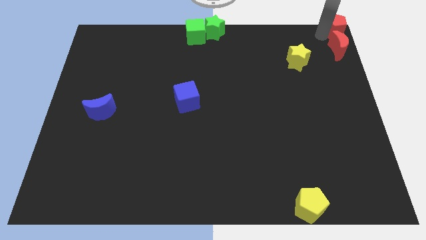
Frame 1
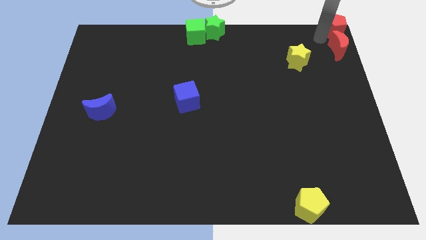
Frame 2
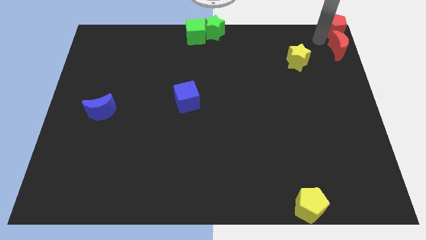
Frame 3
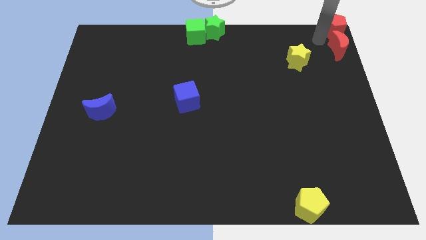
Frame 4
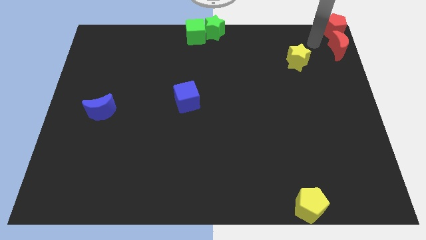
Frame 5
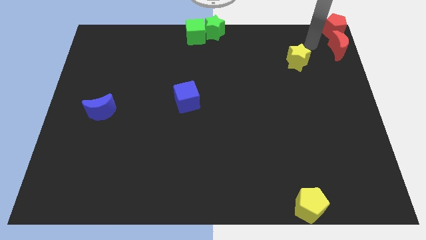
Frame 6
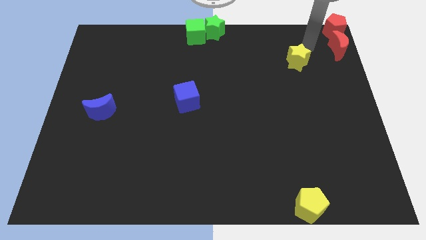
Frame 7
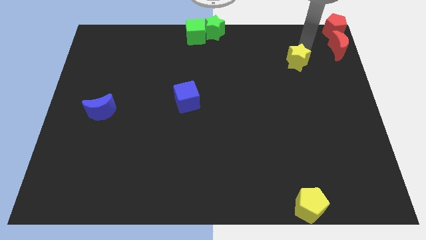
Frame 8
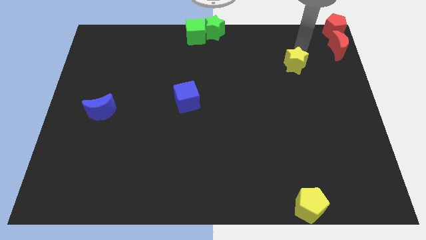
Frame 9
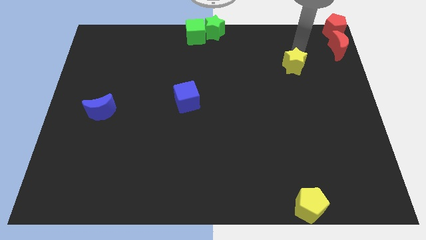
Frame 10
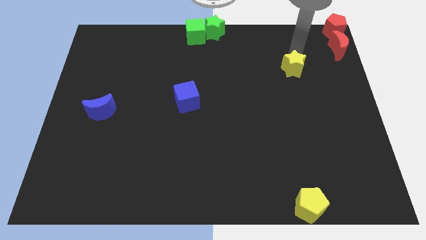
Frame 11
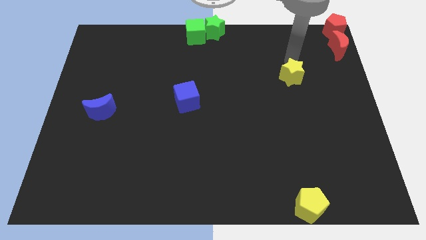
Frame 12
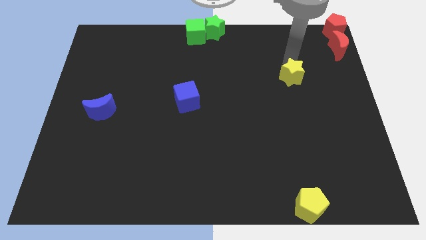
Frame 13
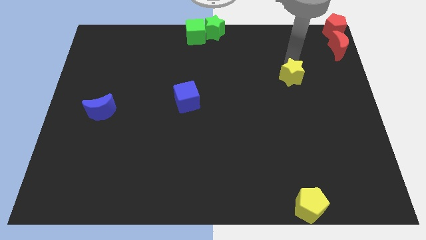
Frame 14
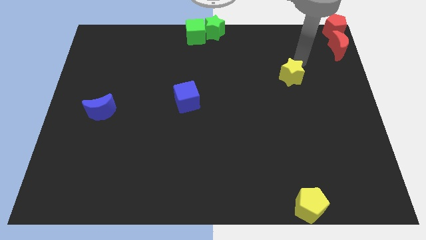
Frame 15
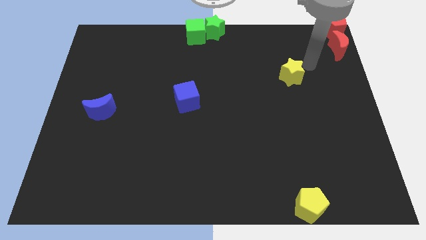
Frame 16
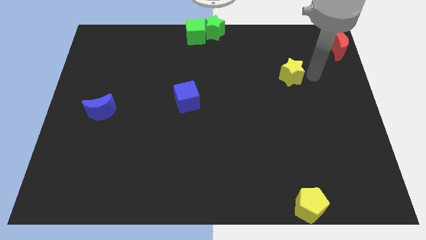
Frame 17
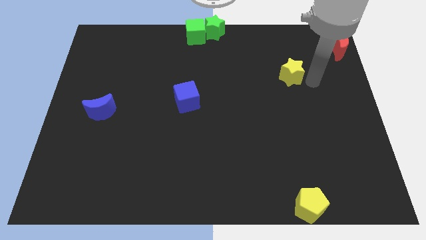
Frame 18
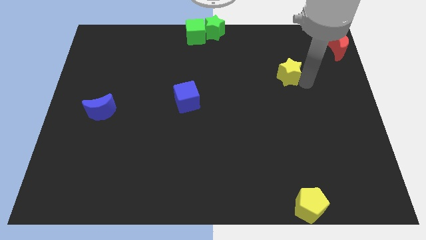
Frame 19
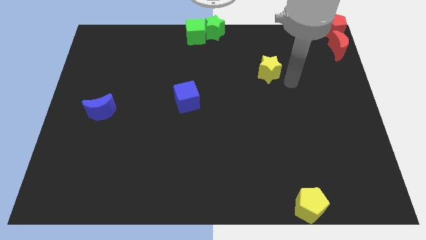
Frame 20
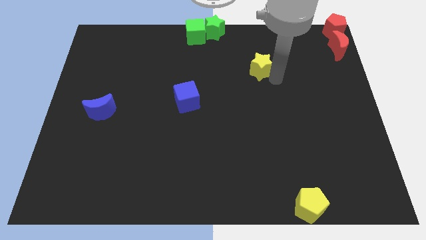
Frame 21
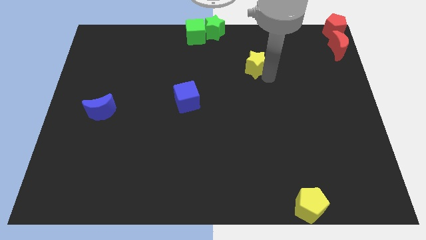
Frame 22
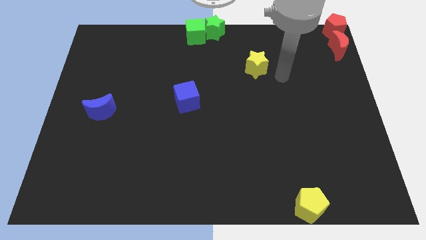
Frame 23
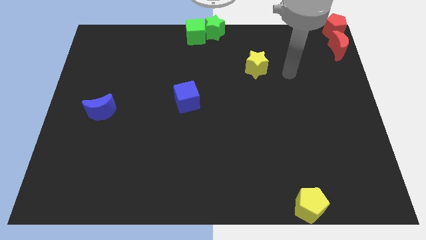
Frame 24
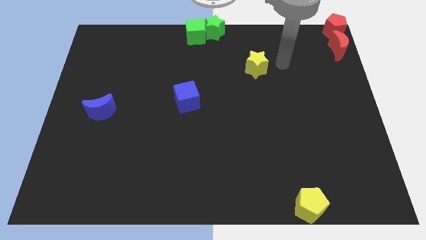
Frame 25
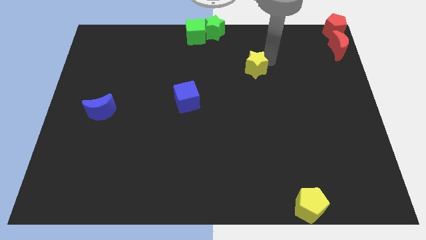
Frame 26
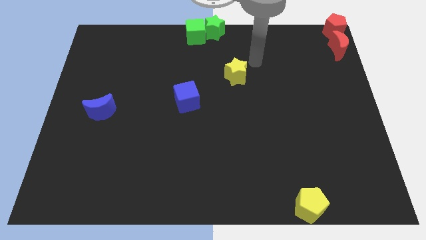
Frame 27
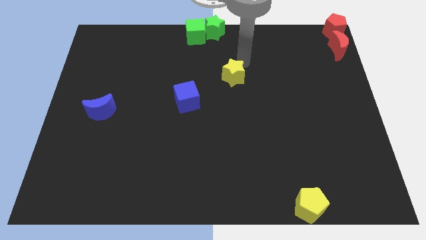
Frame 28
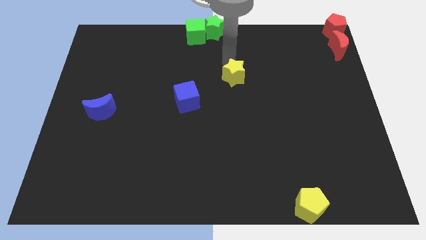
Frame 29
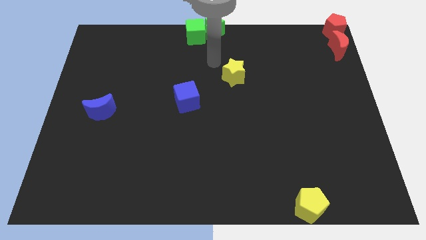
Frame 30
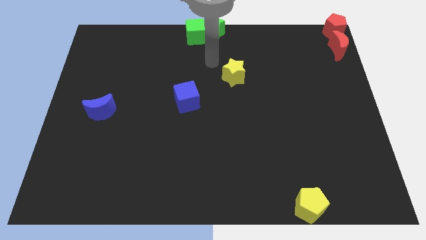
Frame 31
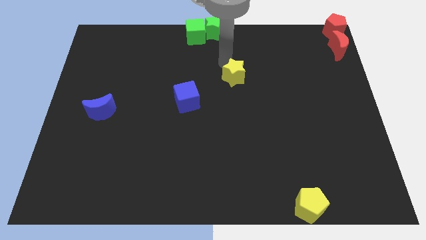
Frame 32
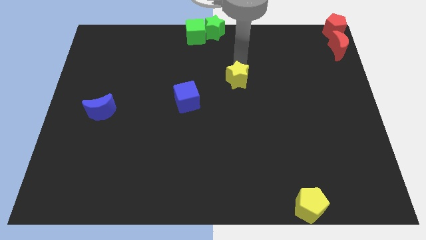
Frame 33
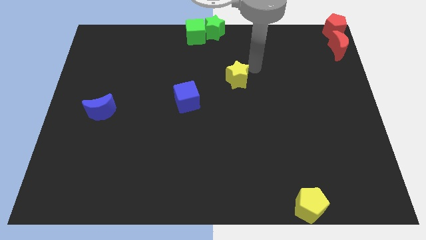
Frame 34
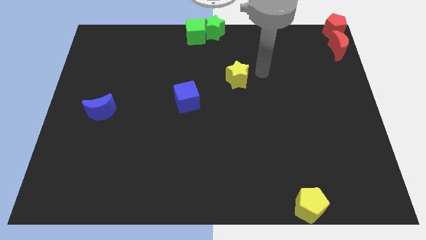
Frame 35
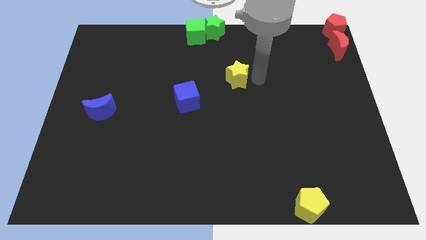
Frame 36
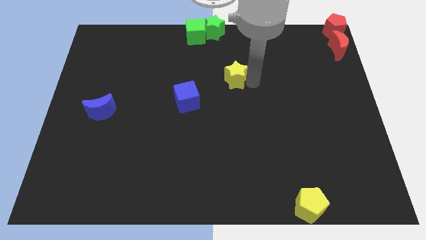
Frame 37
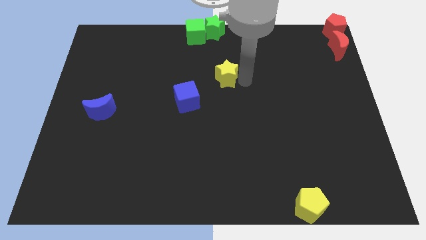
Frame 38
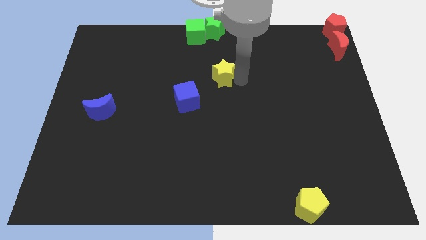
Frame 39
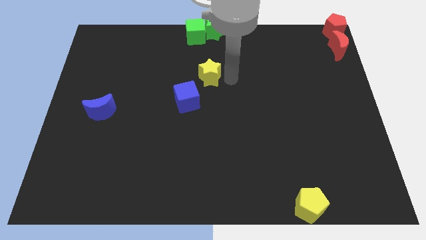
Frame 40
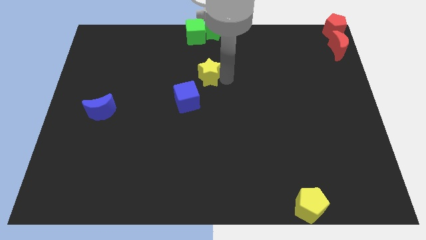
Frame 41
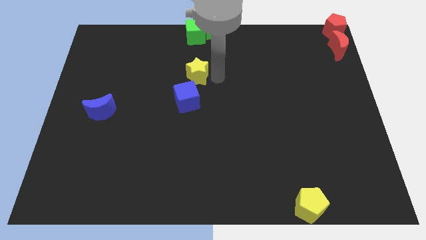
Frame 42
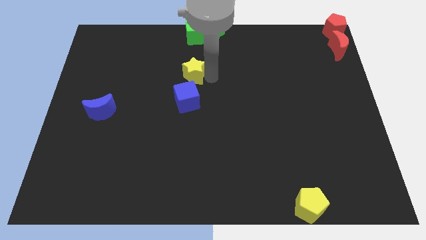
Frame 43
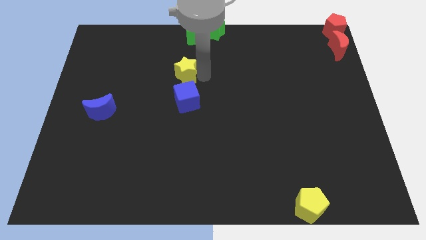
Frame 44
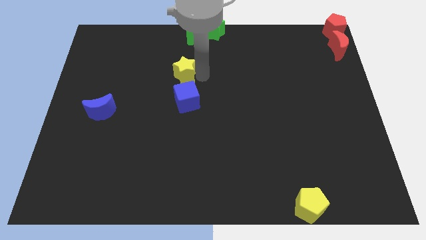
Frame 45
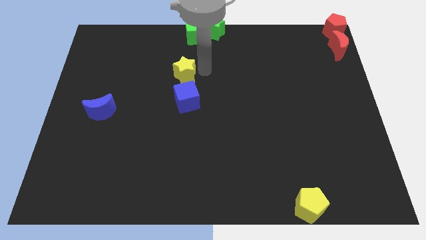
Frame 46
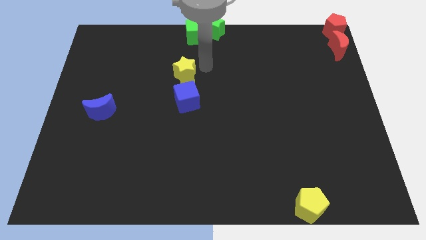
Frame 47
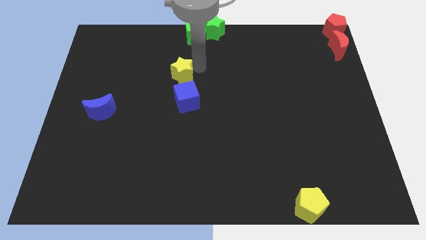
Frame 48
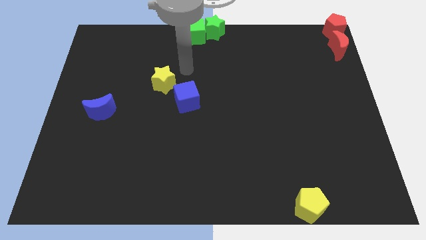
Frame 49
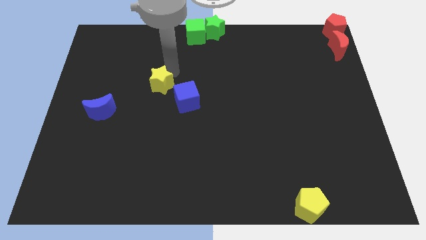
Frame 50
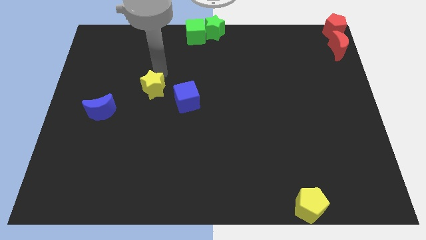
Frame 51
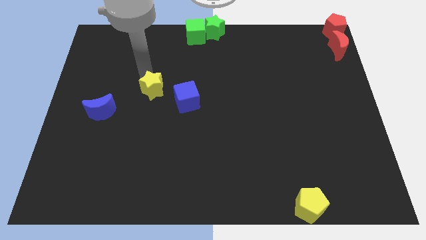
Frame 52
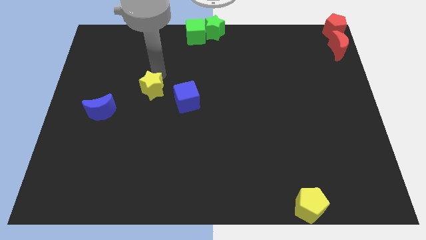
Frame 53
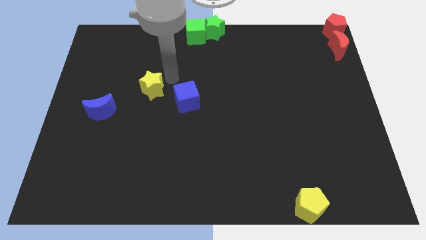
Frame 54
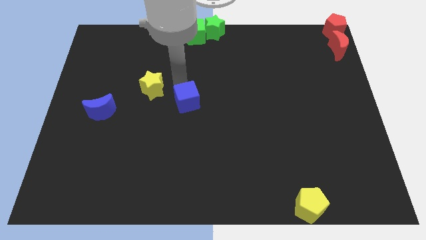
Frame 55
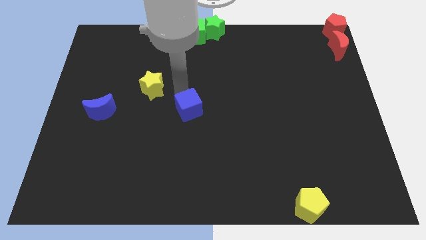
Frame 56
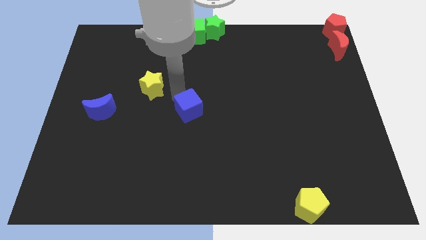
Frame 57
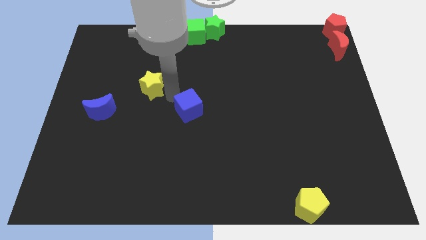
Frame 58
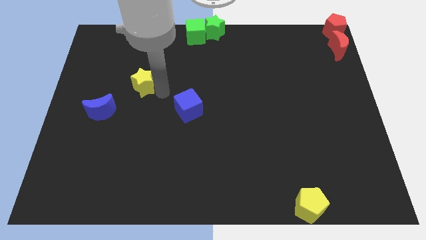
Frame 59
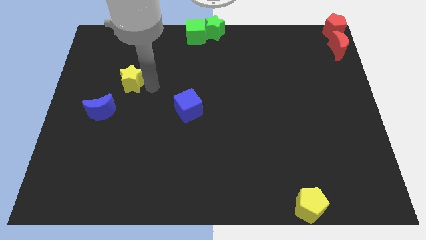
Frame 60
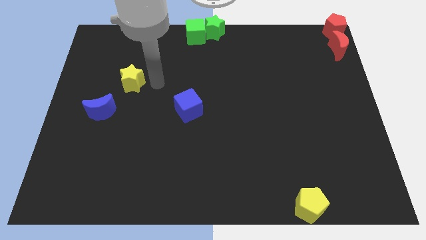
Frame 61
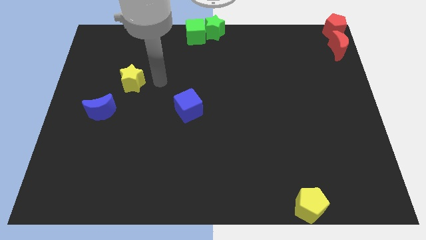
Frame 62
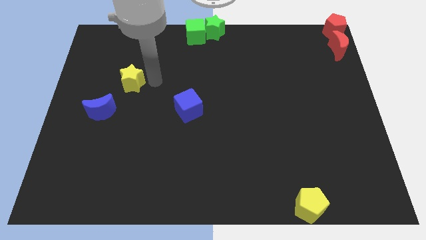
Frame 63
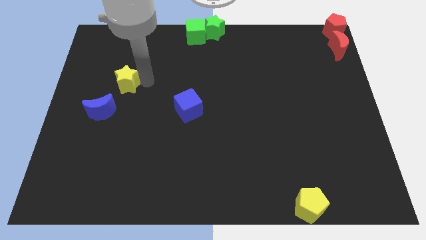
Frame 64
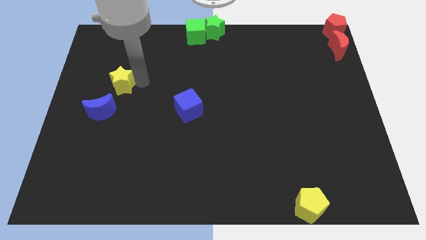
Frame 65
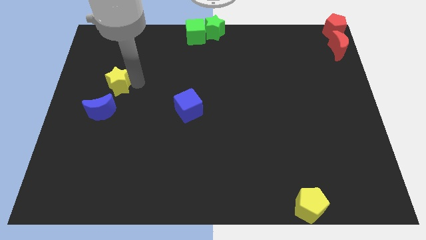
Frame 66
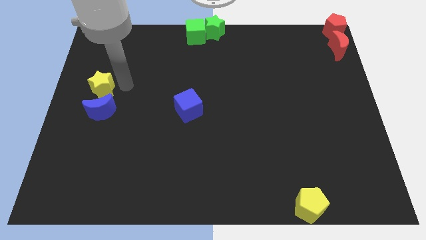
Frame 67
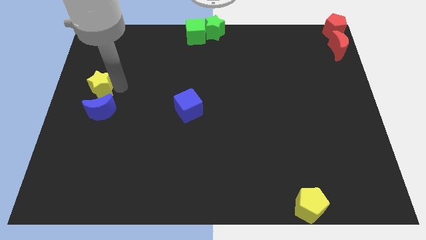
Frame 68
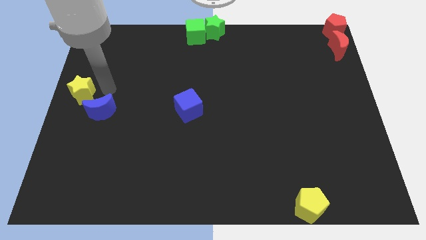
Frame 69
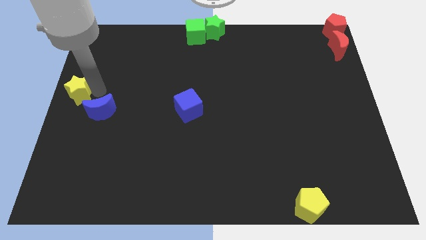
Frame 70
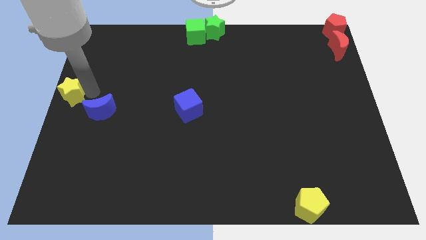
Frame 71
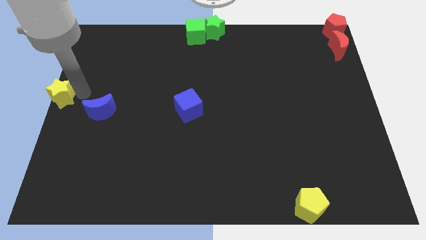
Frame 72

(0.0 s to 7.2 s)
move yellow star towards the left center of the board

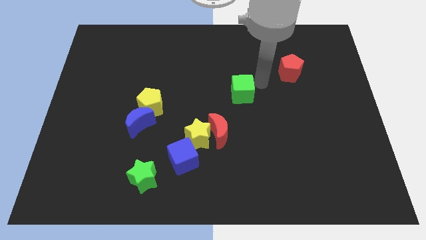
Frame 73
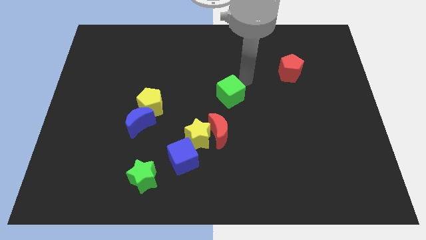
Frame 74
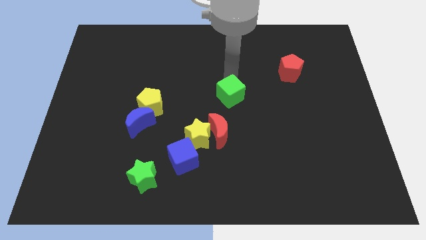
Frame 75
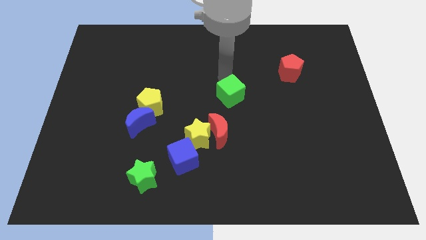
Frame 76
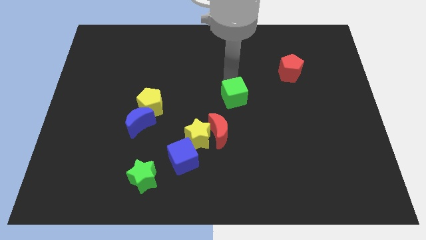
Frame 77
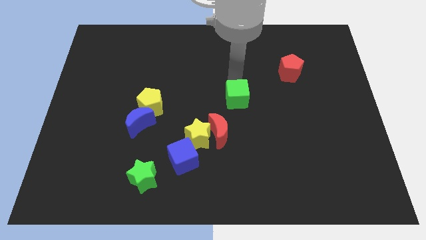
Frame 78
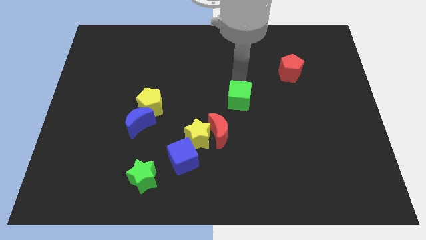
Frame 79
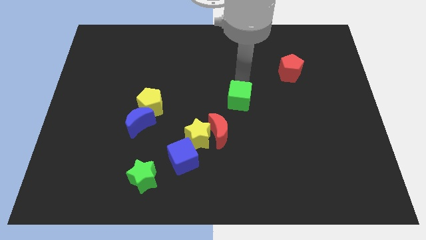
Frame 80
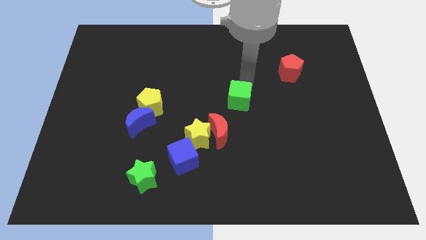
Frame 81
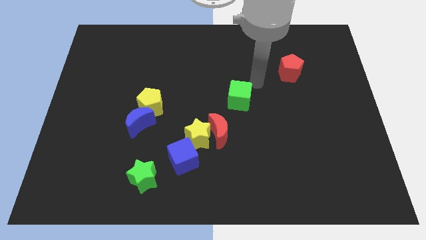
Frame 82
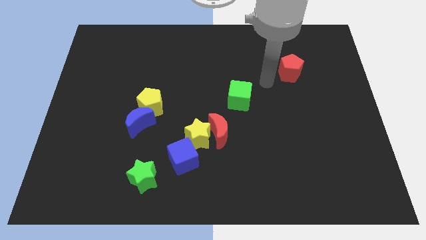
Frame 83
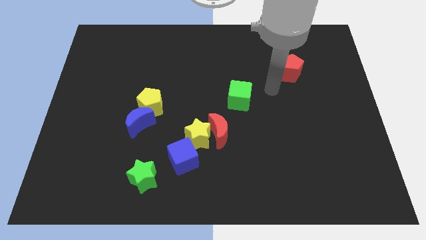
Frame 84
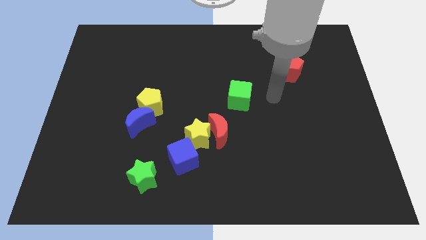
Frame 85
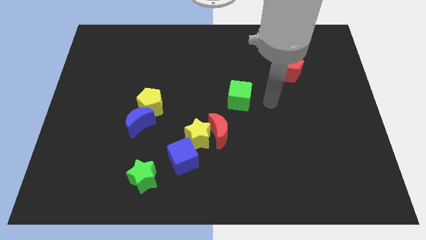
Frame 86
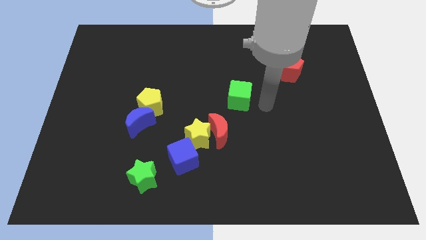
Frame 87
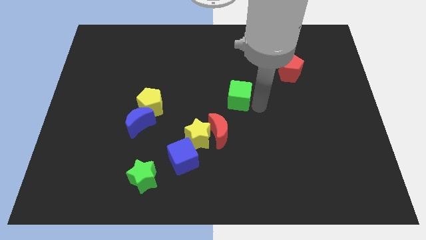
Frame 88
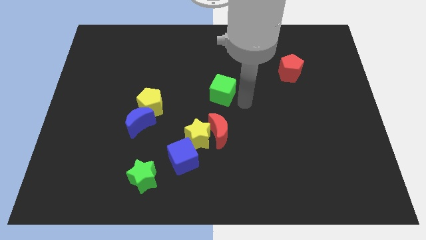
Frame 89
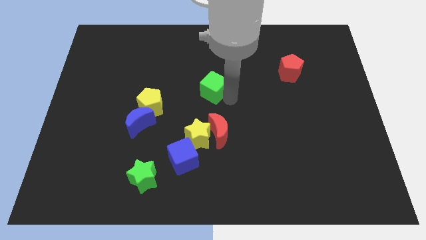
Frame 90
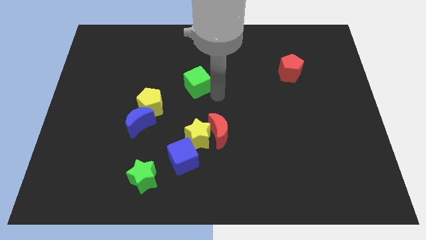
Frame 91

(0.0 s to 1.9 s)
place the green cube vertically above the yellow star
